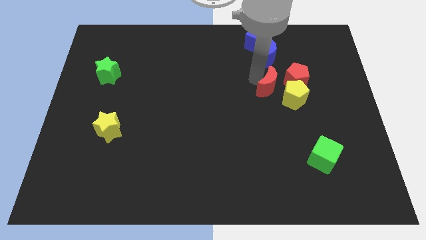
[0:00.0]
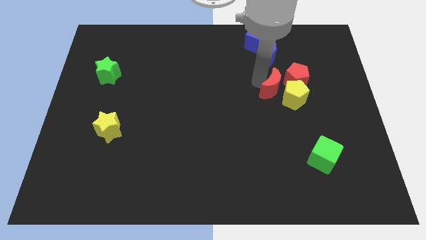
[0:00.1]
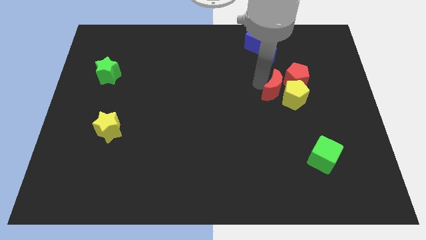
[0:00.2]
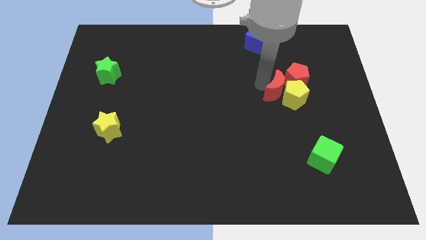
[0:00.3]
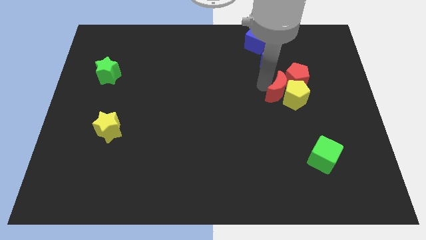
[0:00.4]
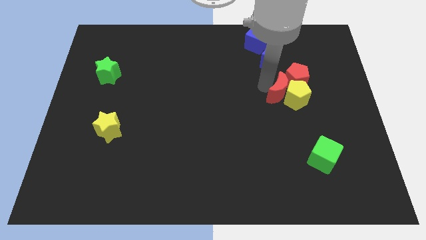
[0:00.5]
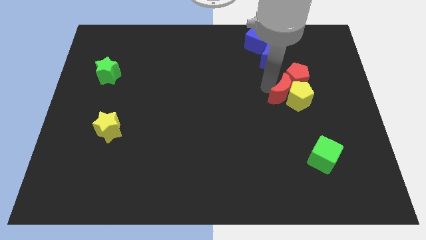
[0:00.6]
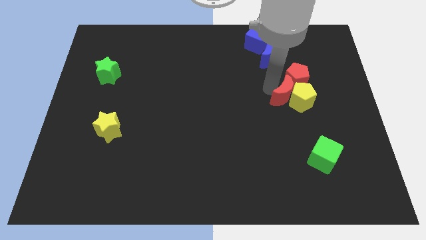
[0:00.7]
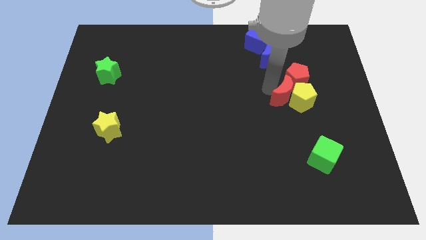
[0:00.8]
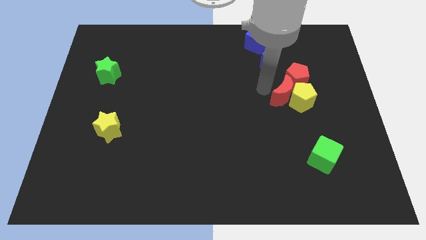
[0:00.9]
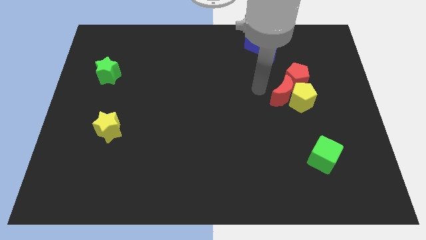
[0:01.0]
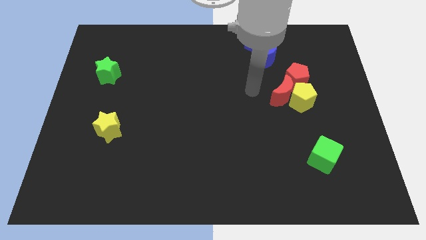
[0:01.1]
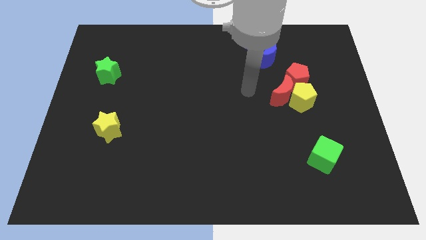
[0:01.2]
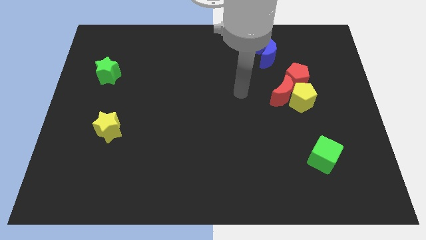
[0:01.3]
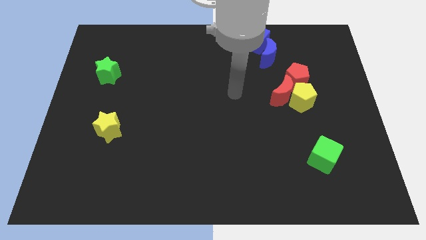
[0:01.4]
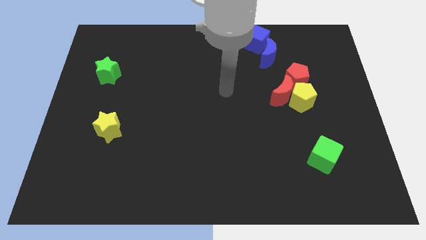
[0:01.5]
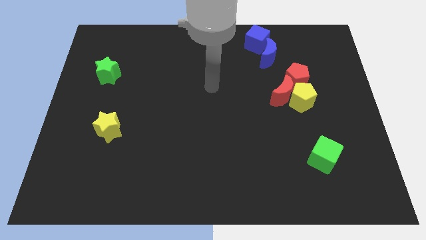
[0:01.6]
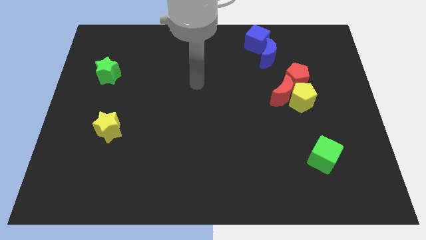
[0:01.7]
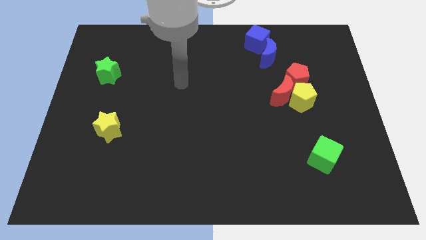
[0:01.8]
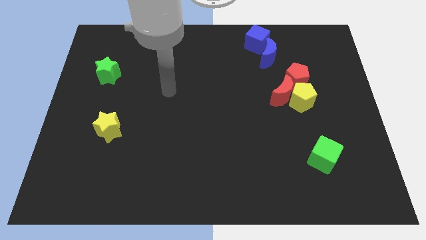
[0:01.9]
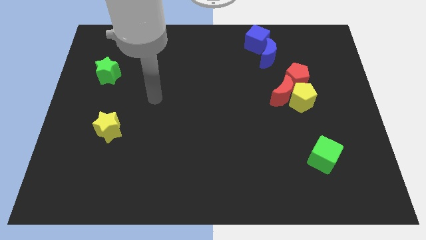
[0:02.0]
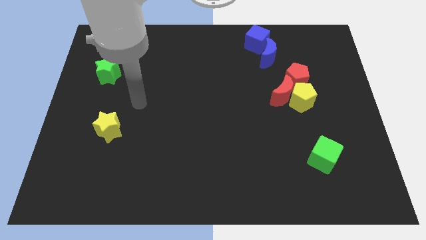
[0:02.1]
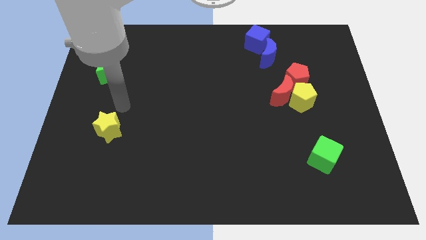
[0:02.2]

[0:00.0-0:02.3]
move red crescent into yellow pentagon

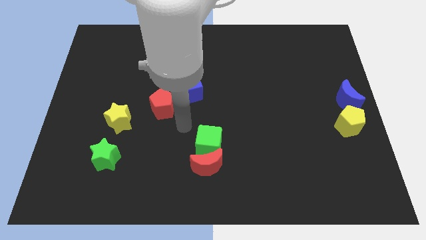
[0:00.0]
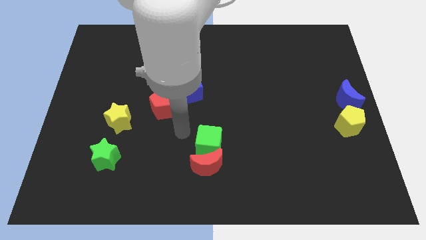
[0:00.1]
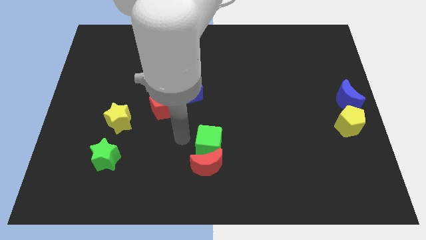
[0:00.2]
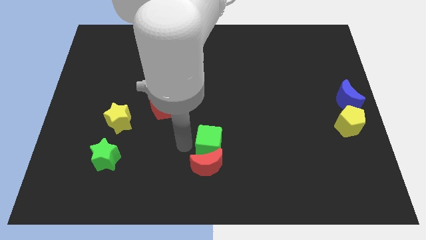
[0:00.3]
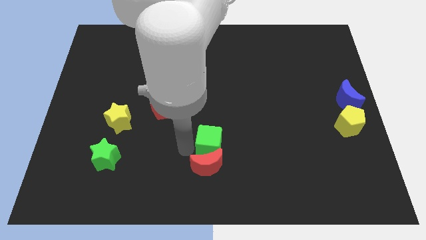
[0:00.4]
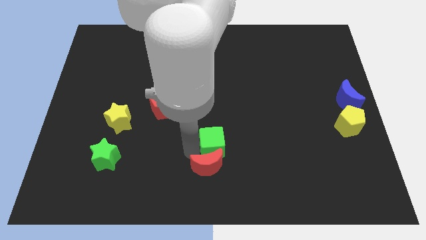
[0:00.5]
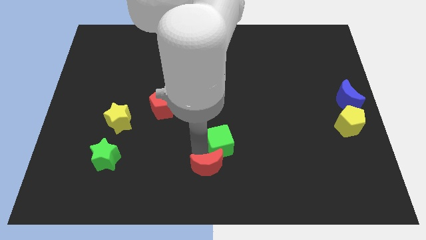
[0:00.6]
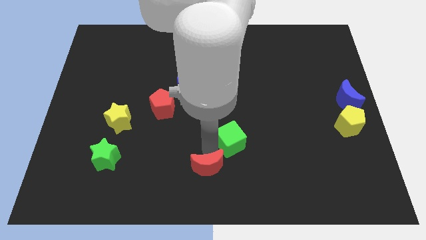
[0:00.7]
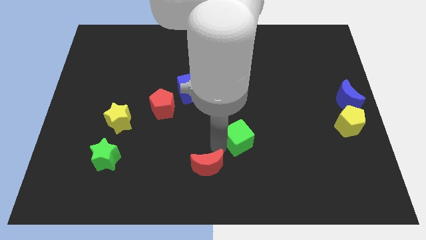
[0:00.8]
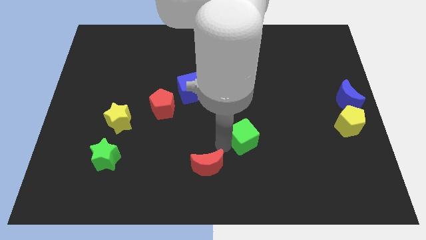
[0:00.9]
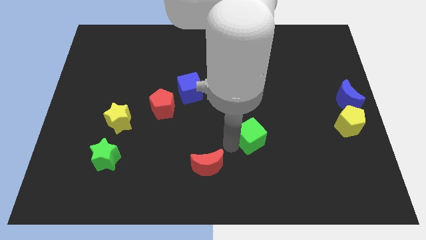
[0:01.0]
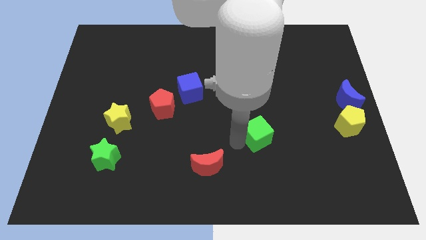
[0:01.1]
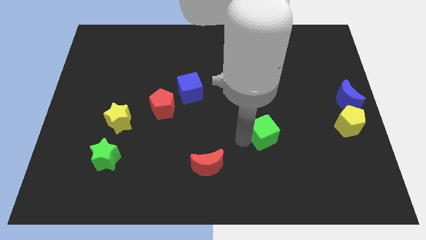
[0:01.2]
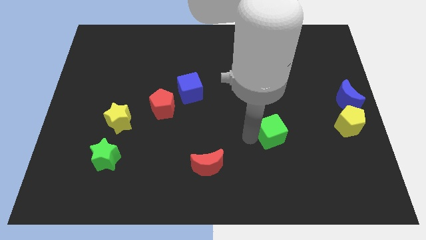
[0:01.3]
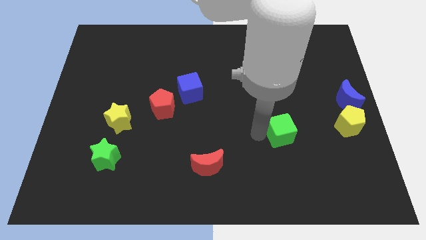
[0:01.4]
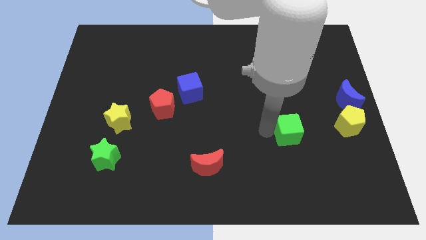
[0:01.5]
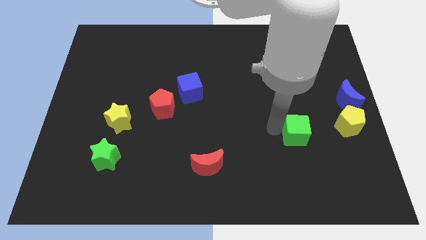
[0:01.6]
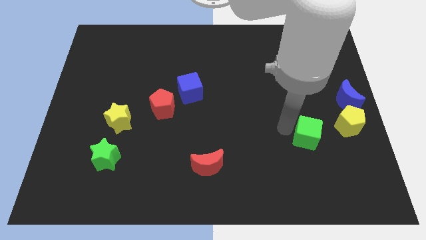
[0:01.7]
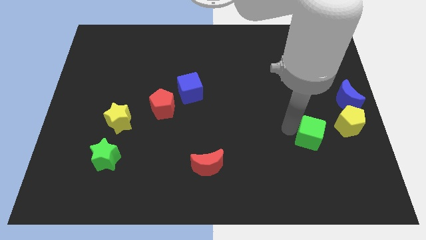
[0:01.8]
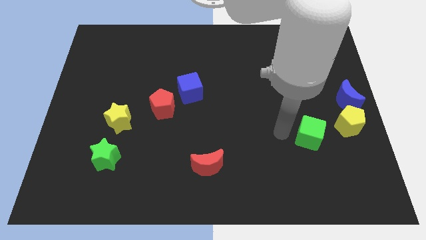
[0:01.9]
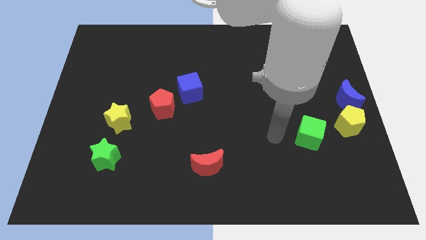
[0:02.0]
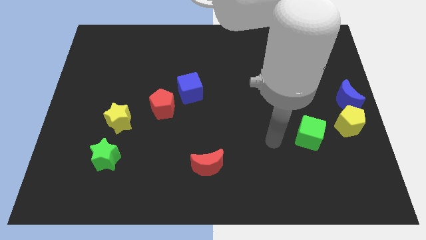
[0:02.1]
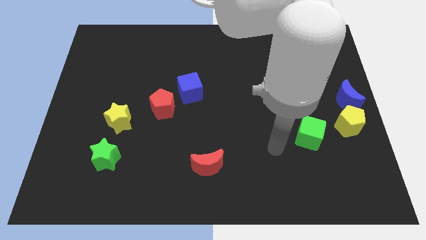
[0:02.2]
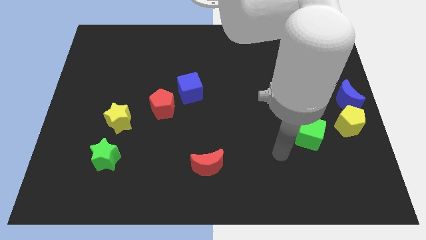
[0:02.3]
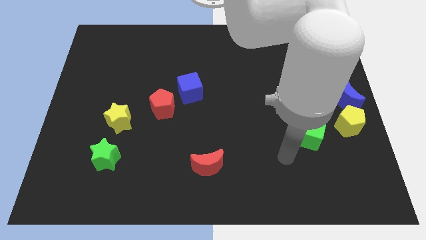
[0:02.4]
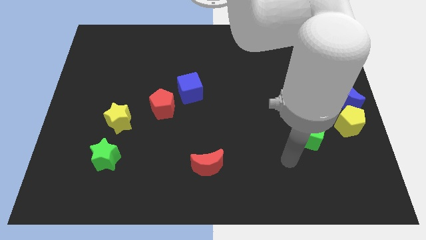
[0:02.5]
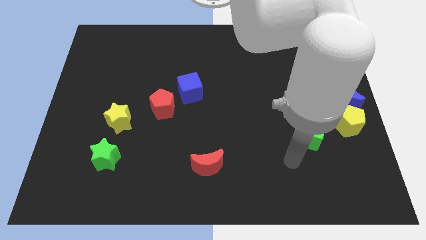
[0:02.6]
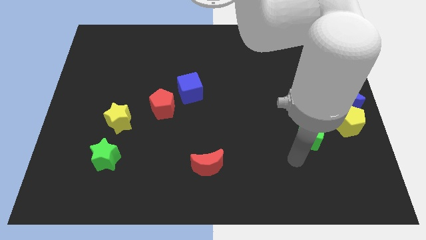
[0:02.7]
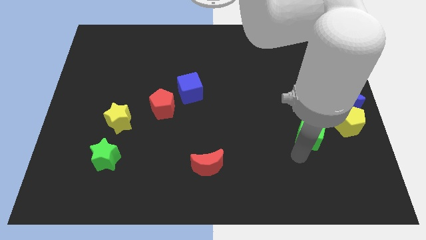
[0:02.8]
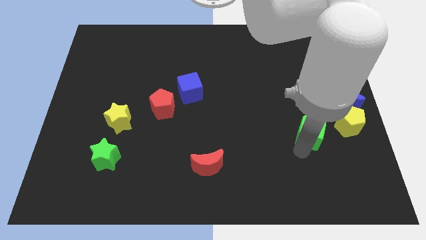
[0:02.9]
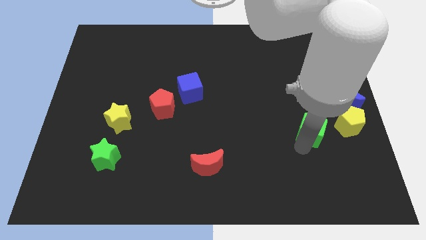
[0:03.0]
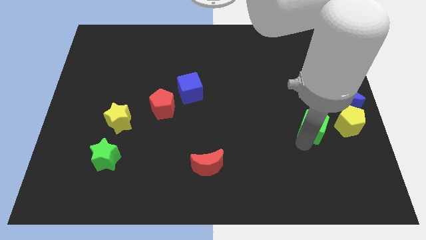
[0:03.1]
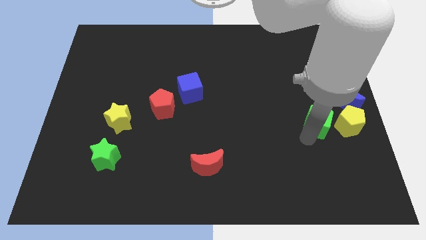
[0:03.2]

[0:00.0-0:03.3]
place the green cube left to the yellow pentagon

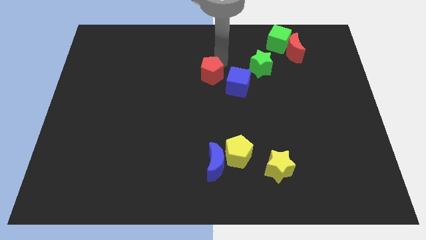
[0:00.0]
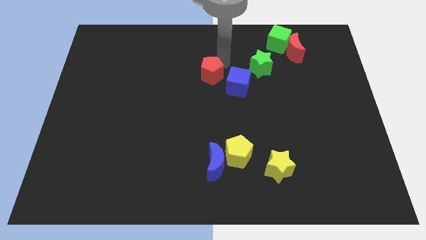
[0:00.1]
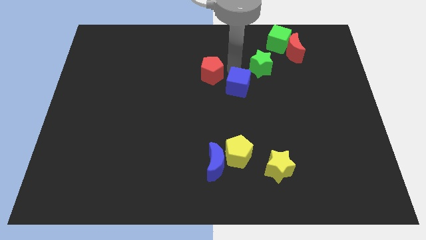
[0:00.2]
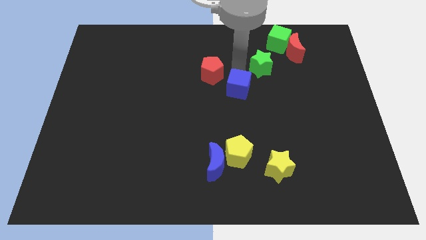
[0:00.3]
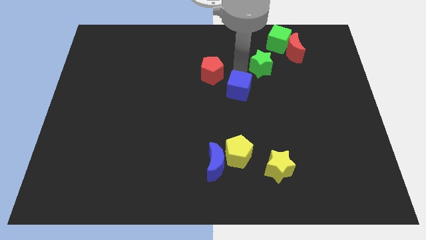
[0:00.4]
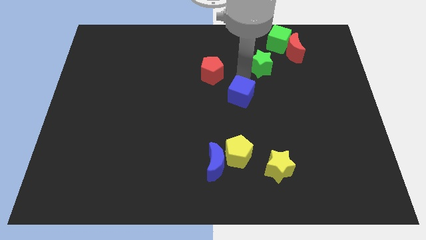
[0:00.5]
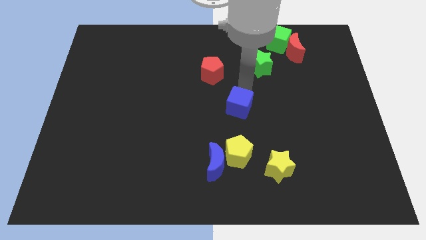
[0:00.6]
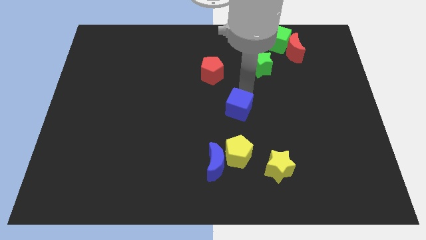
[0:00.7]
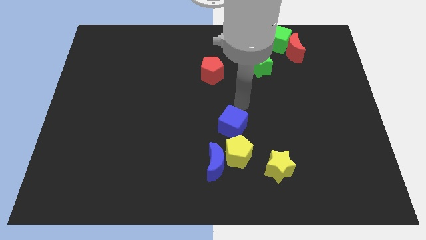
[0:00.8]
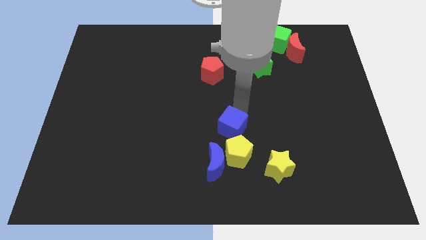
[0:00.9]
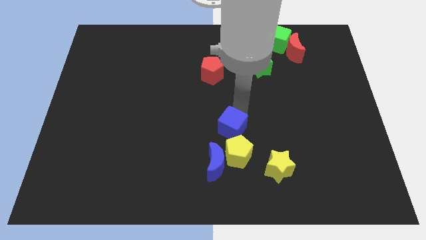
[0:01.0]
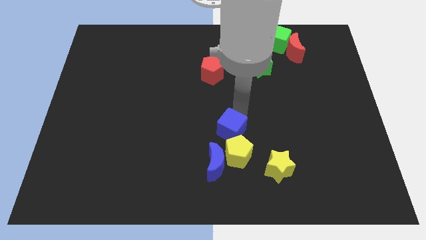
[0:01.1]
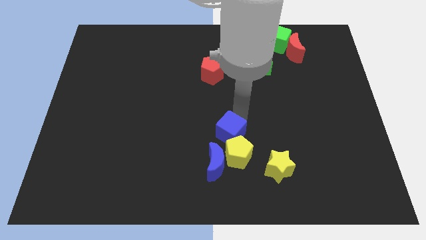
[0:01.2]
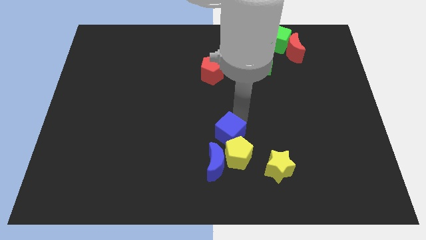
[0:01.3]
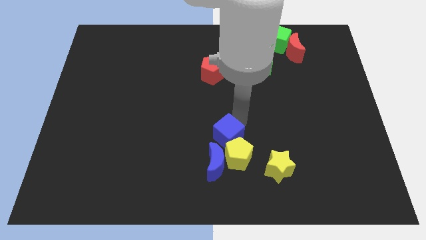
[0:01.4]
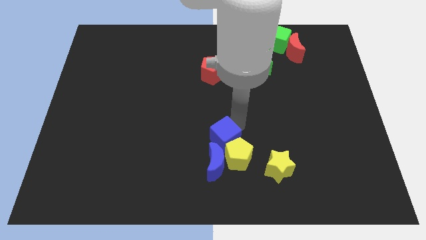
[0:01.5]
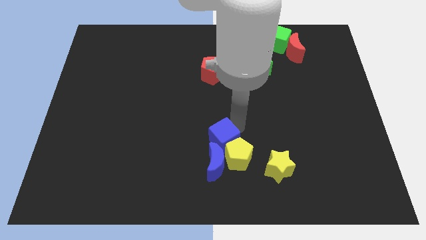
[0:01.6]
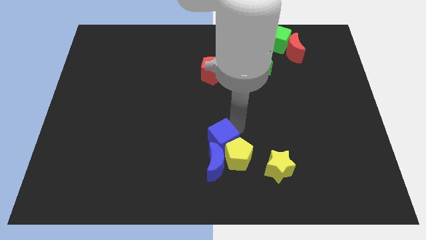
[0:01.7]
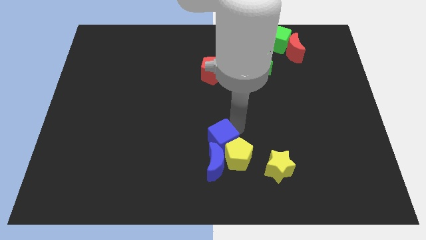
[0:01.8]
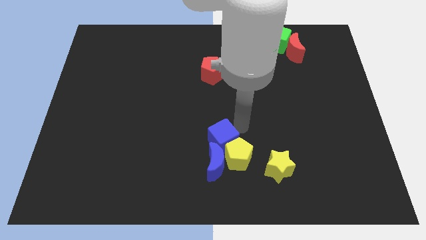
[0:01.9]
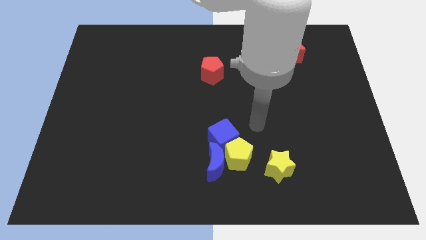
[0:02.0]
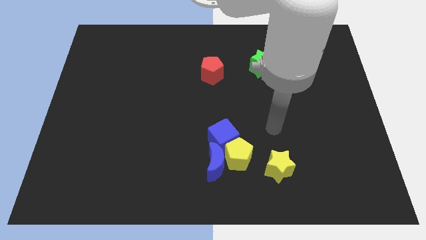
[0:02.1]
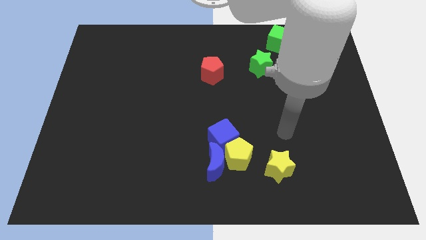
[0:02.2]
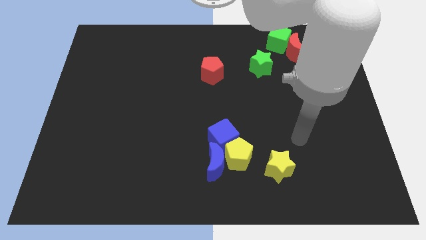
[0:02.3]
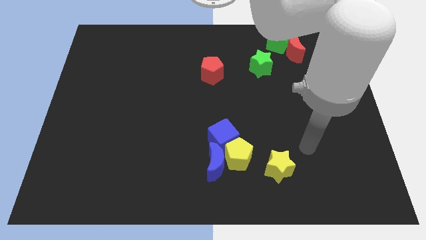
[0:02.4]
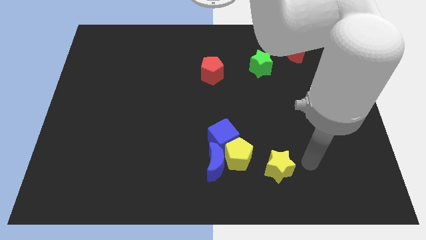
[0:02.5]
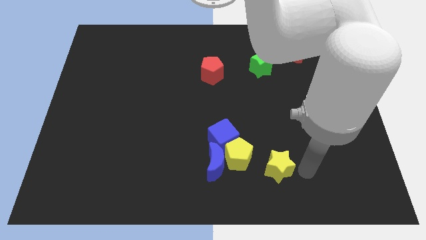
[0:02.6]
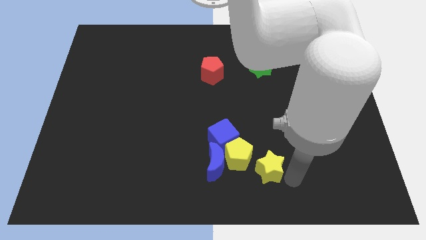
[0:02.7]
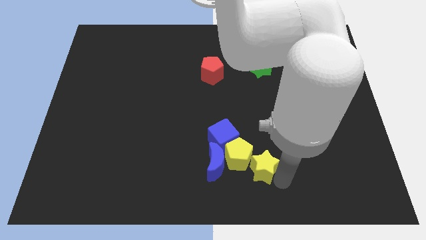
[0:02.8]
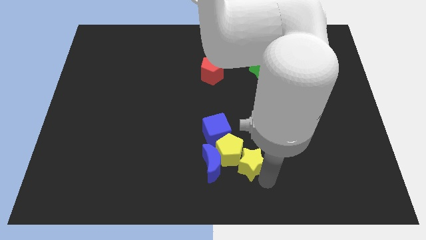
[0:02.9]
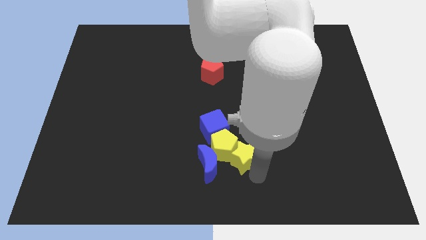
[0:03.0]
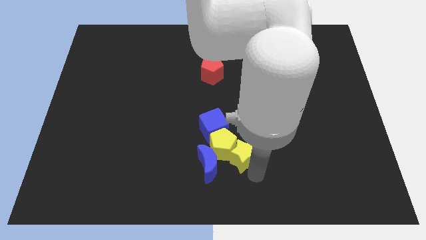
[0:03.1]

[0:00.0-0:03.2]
push yellow star into the yellow pentagon

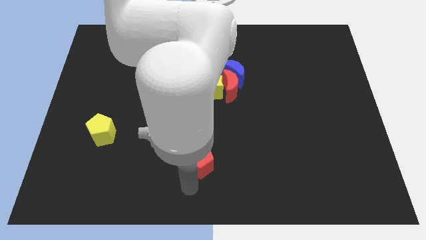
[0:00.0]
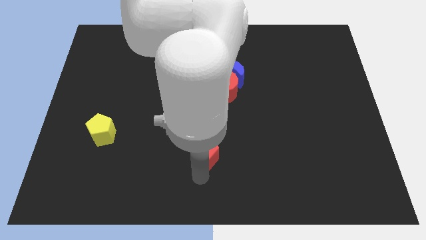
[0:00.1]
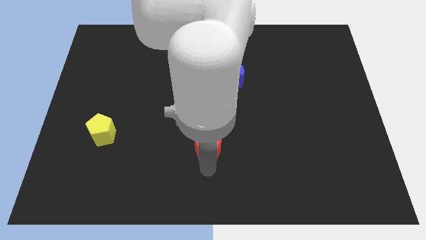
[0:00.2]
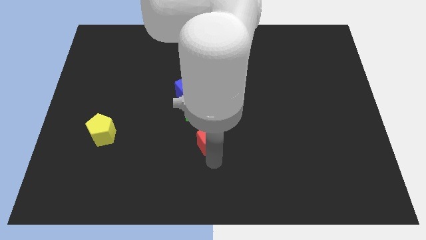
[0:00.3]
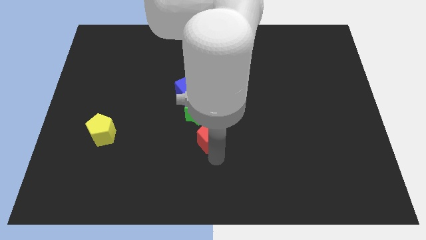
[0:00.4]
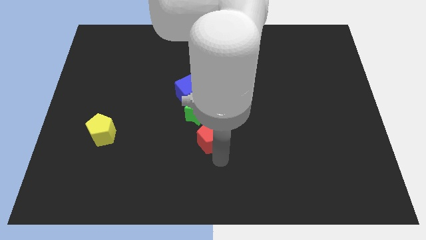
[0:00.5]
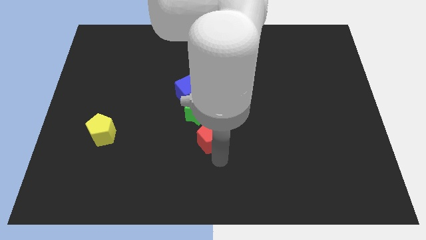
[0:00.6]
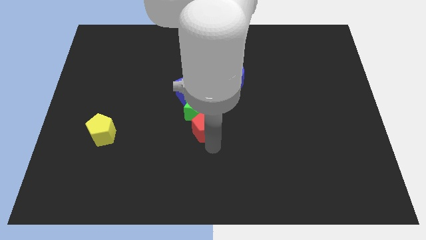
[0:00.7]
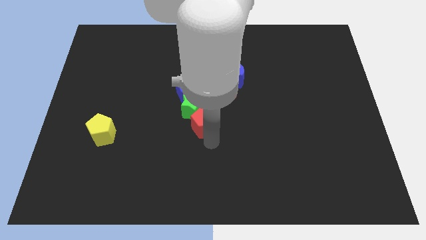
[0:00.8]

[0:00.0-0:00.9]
move the red pentagon into the group of blocks
